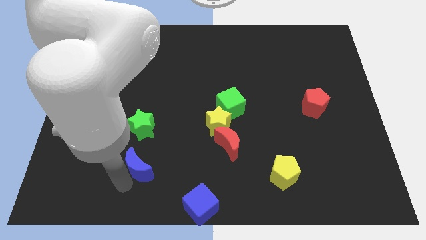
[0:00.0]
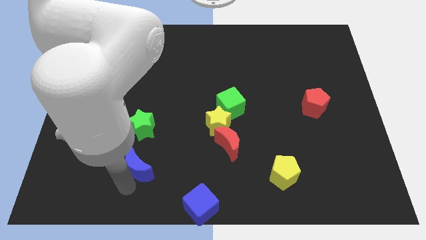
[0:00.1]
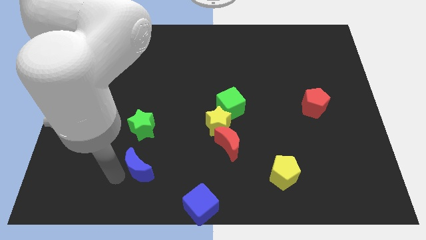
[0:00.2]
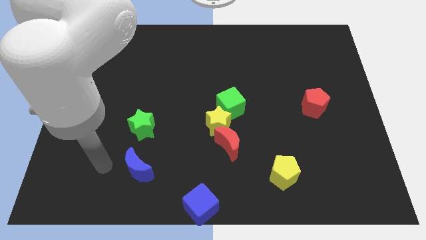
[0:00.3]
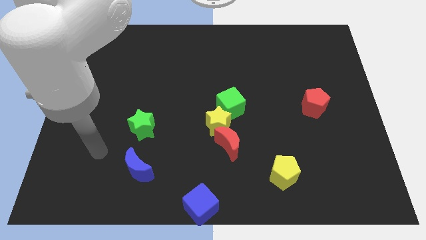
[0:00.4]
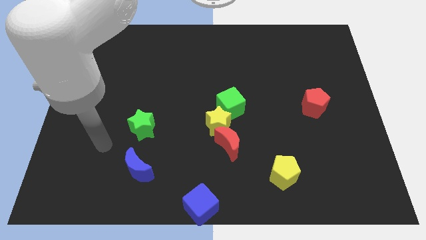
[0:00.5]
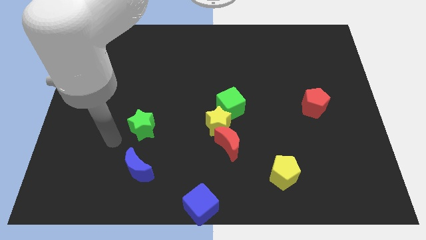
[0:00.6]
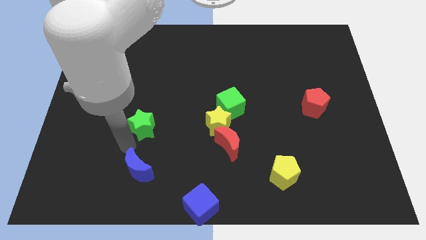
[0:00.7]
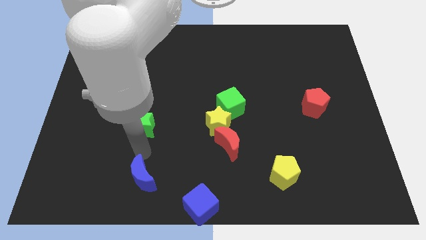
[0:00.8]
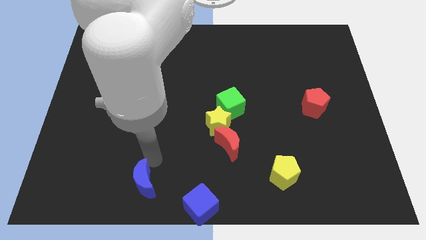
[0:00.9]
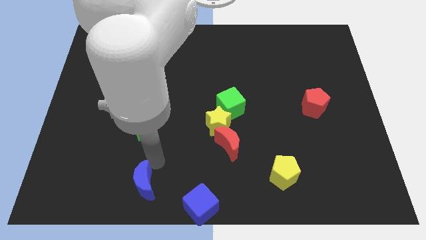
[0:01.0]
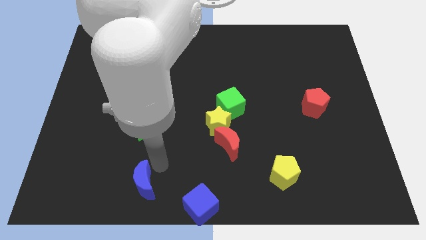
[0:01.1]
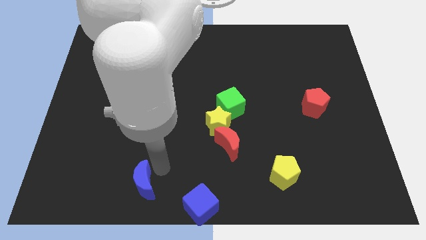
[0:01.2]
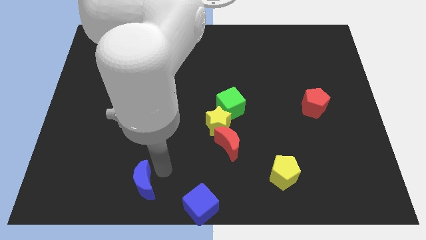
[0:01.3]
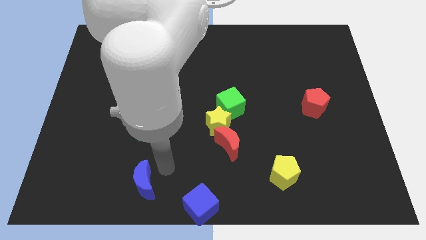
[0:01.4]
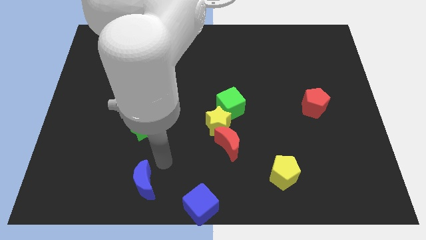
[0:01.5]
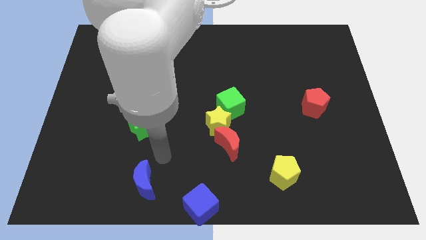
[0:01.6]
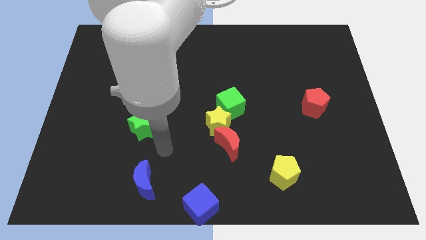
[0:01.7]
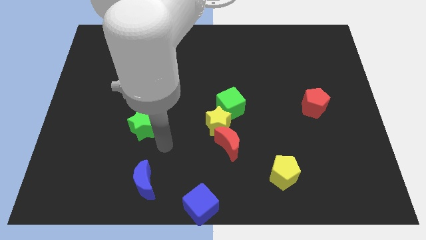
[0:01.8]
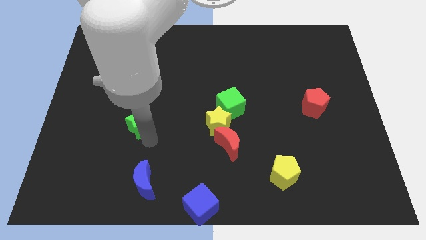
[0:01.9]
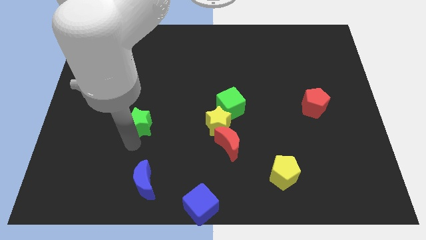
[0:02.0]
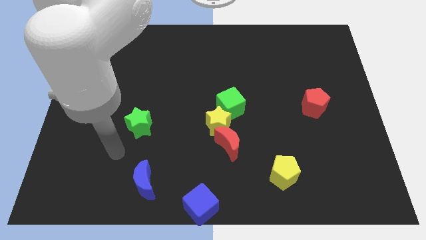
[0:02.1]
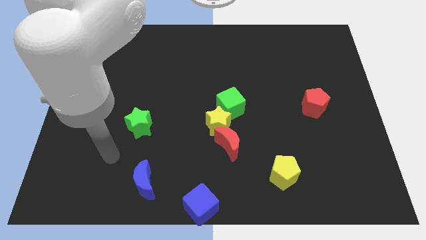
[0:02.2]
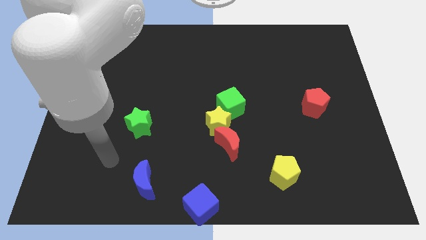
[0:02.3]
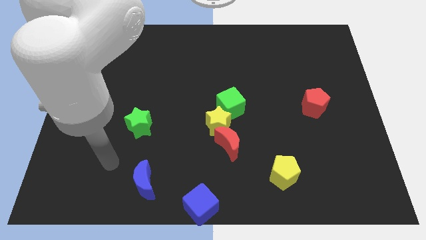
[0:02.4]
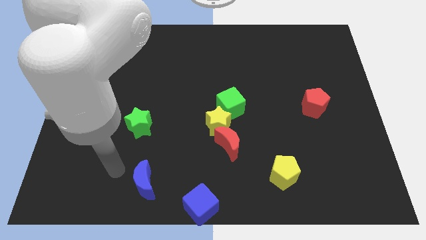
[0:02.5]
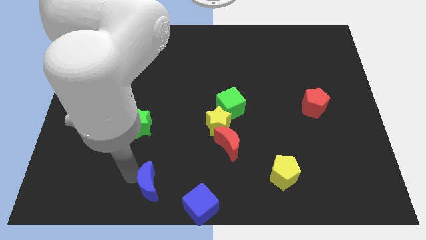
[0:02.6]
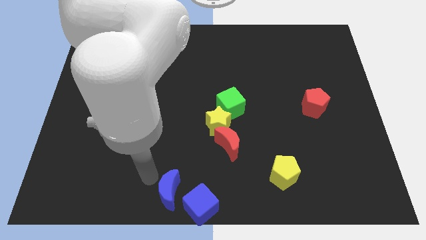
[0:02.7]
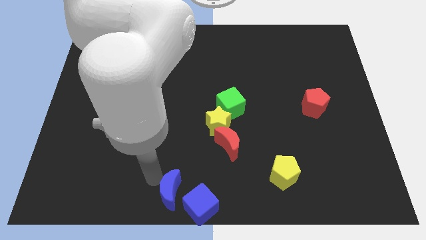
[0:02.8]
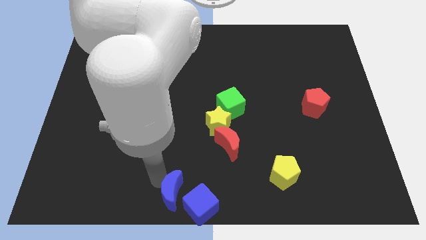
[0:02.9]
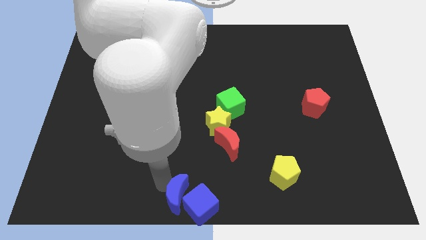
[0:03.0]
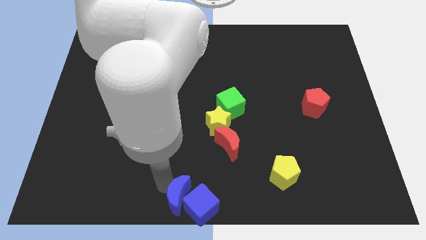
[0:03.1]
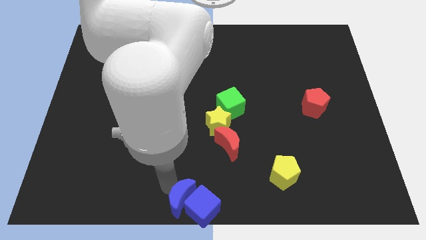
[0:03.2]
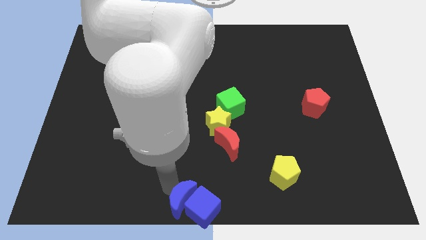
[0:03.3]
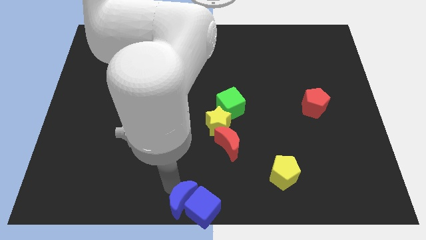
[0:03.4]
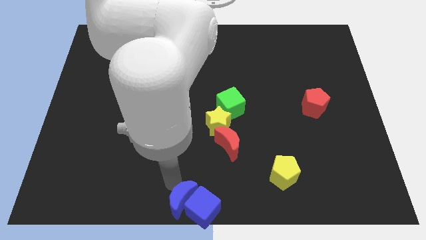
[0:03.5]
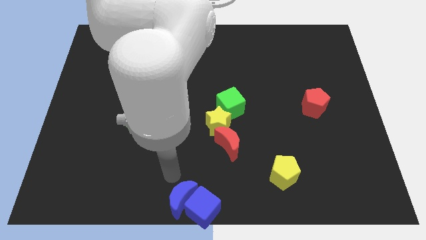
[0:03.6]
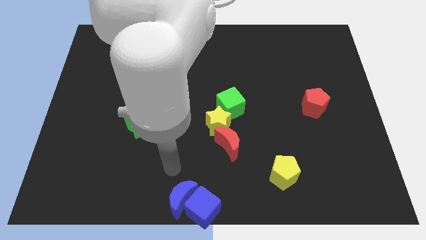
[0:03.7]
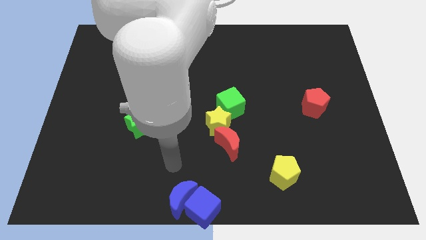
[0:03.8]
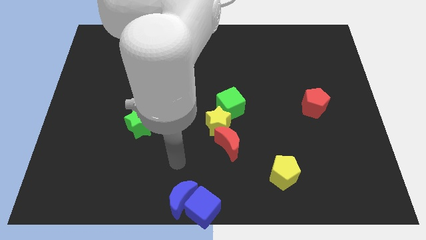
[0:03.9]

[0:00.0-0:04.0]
push the blue crescent close to the blue cube

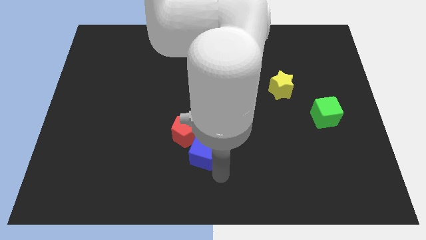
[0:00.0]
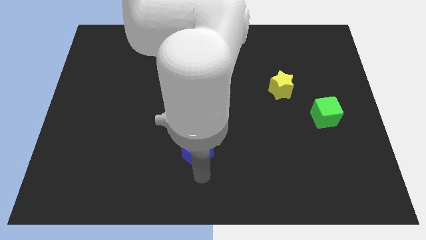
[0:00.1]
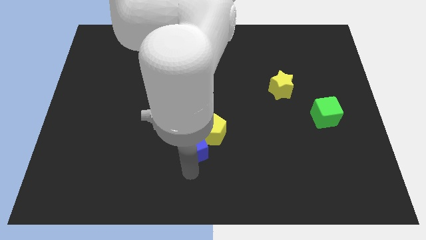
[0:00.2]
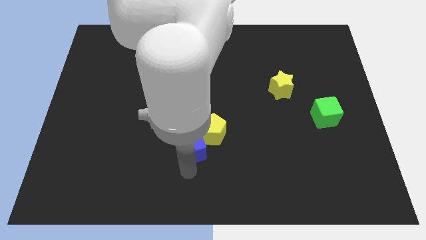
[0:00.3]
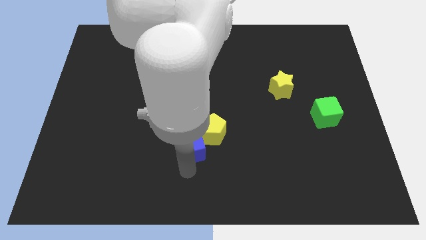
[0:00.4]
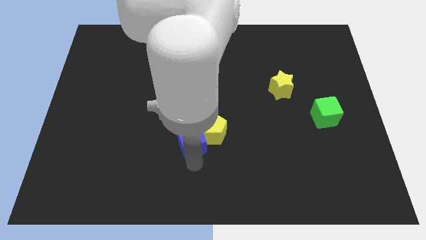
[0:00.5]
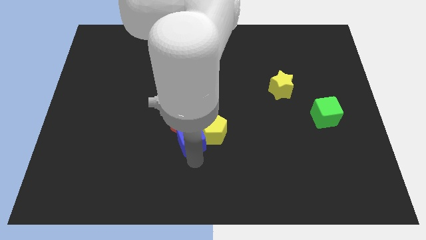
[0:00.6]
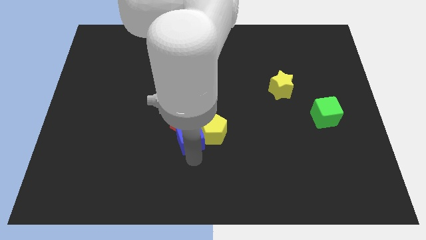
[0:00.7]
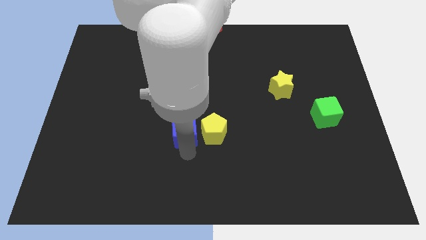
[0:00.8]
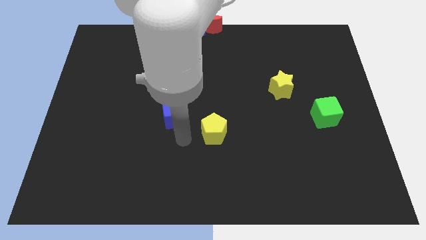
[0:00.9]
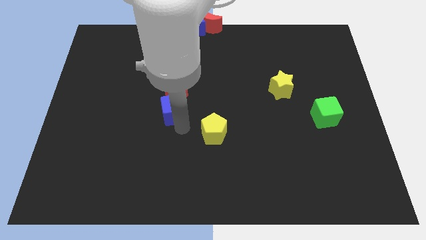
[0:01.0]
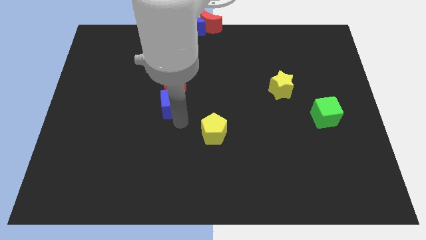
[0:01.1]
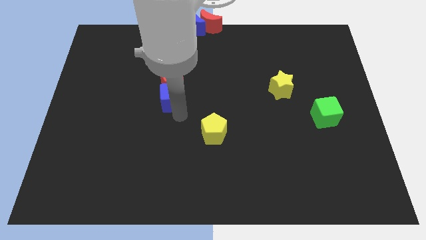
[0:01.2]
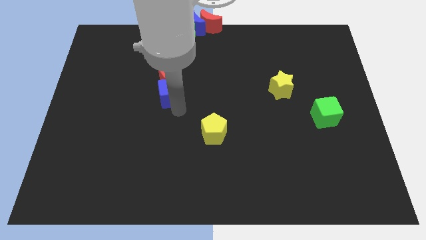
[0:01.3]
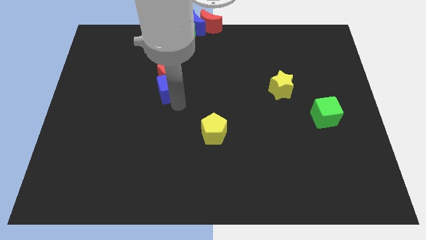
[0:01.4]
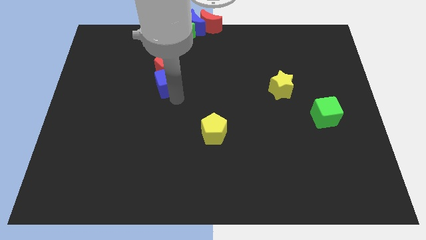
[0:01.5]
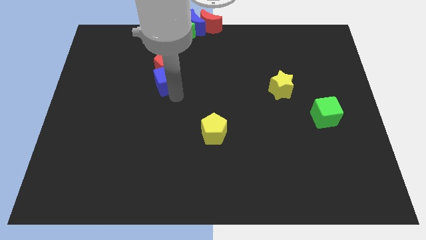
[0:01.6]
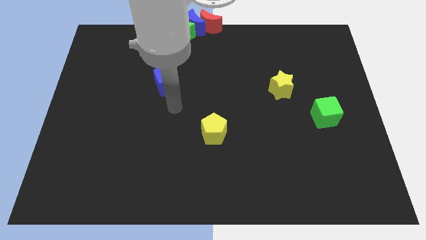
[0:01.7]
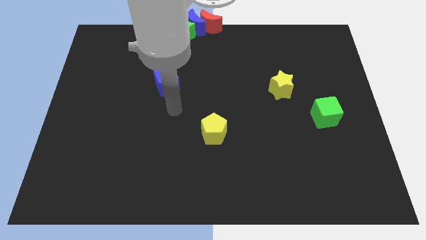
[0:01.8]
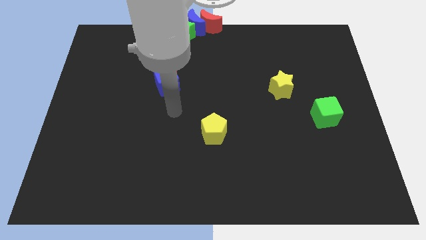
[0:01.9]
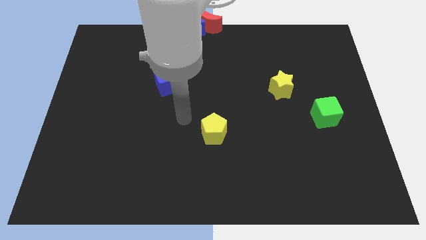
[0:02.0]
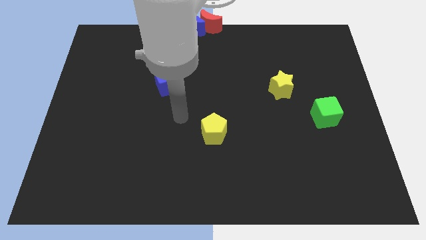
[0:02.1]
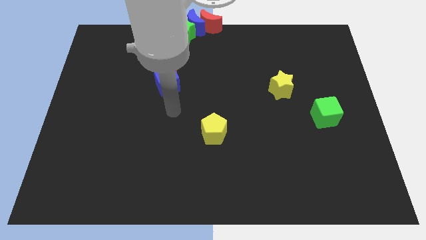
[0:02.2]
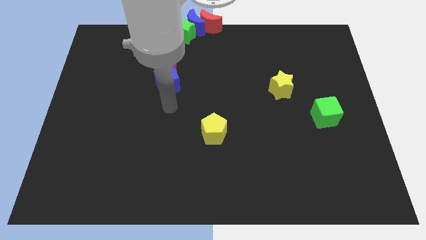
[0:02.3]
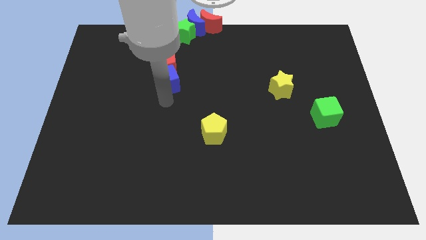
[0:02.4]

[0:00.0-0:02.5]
push the red pentagon into the blue cube towrads up

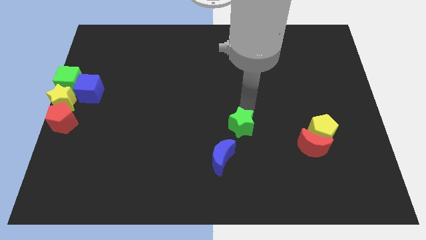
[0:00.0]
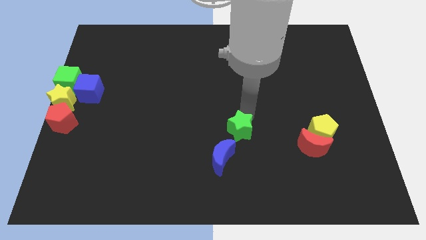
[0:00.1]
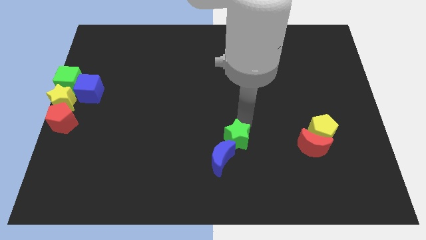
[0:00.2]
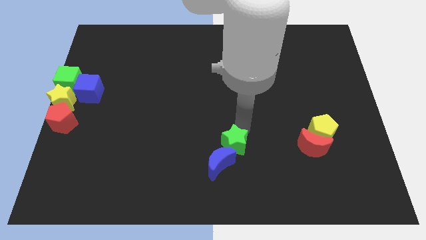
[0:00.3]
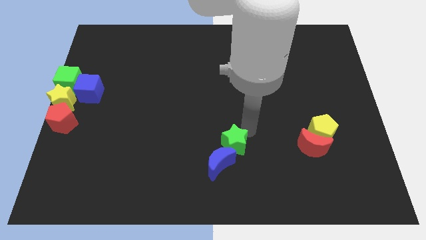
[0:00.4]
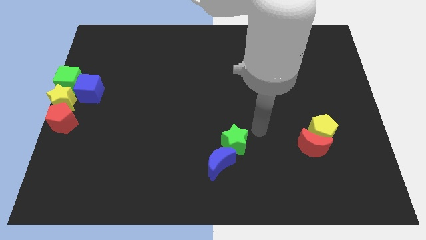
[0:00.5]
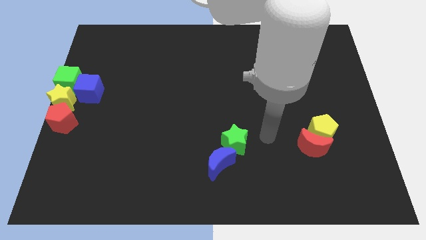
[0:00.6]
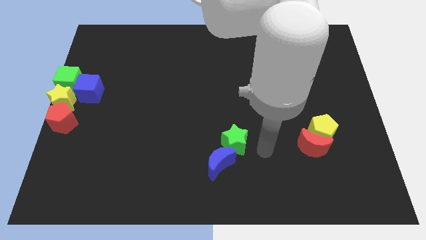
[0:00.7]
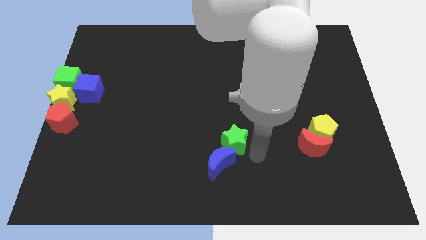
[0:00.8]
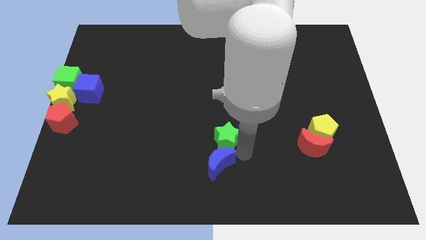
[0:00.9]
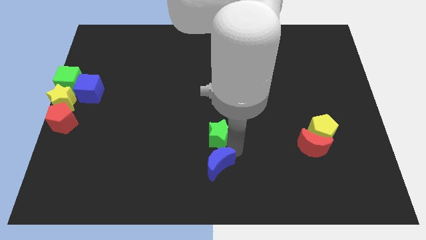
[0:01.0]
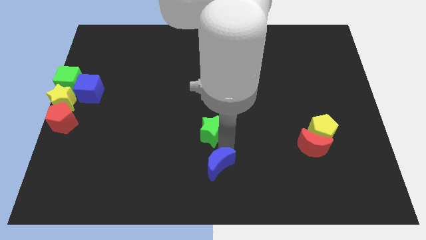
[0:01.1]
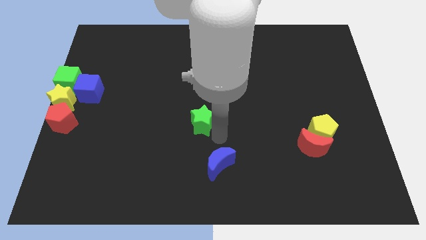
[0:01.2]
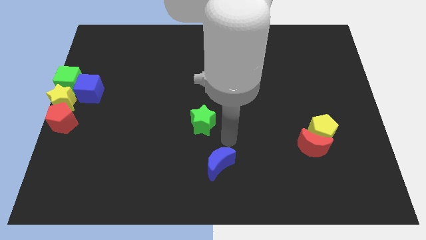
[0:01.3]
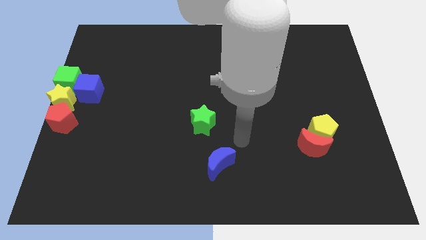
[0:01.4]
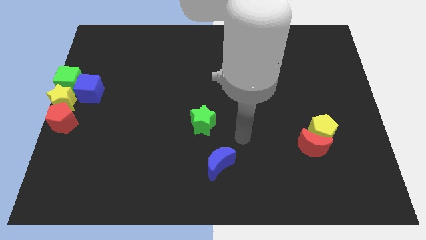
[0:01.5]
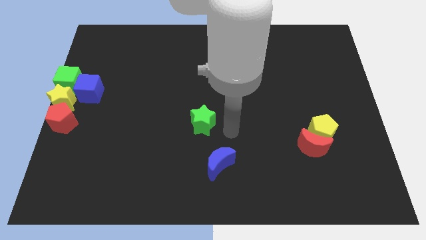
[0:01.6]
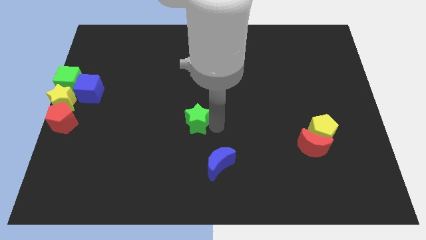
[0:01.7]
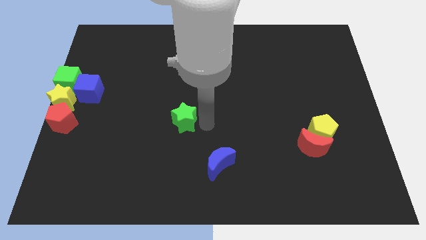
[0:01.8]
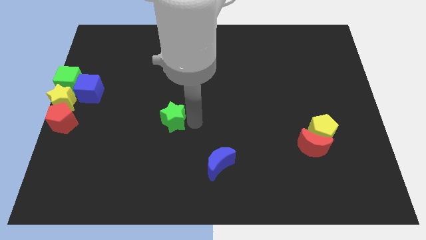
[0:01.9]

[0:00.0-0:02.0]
move the green star to the top left of the blue crescent

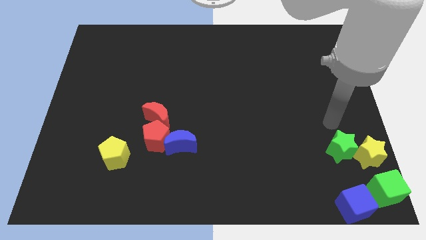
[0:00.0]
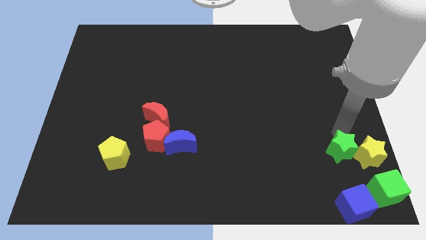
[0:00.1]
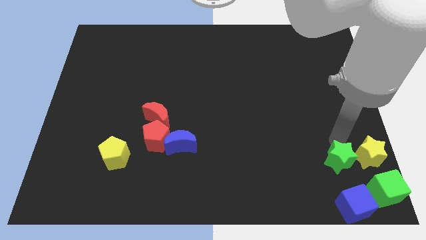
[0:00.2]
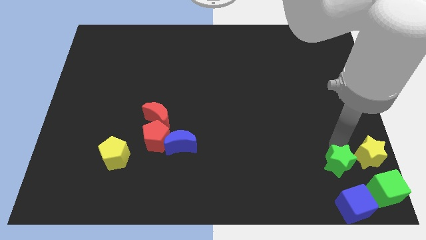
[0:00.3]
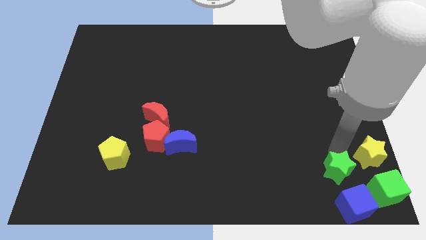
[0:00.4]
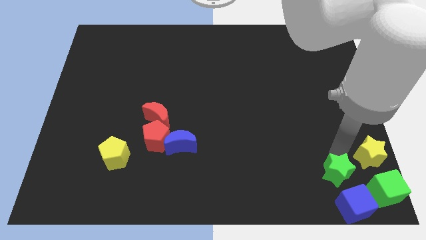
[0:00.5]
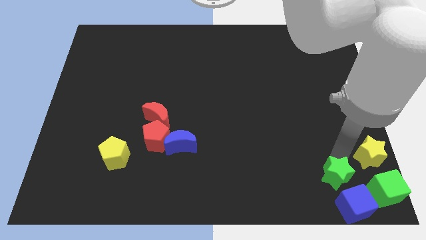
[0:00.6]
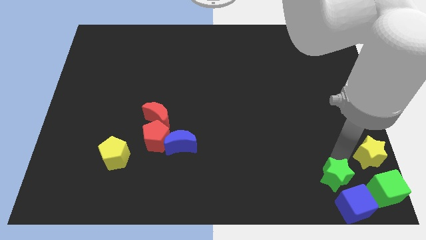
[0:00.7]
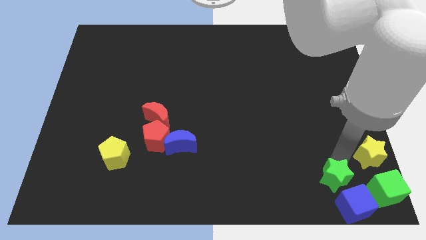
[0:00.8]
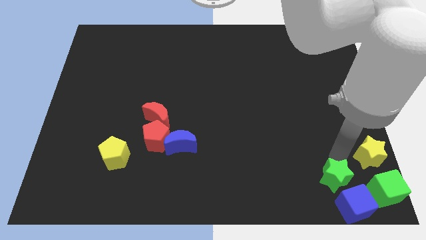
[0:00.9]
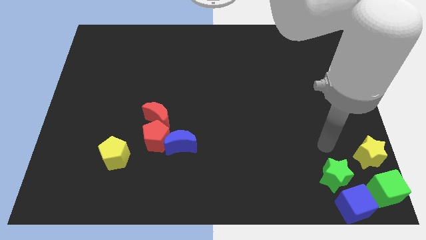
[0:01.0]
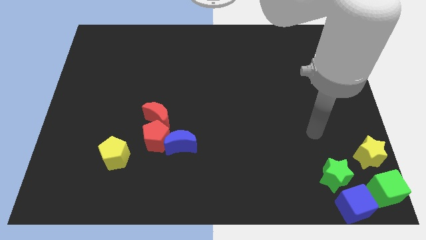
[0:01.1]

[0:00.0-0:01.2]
place the green star towards the top of the blue cube
